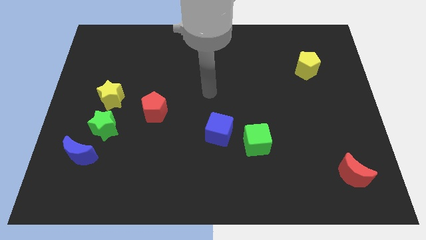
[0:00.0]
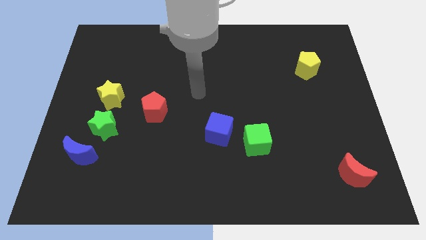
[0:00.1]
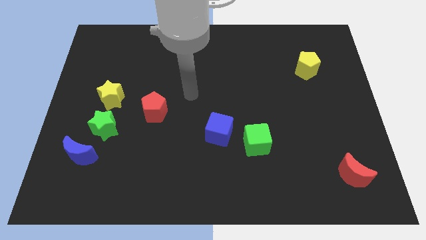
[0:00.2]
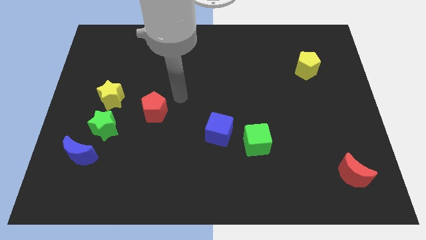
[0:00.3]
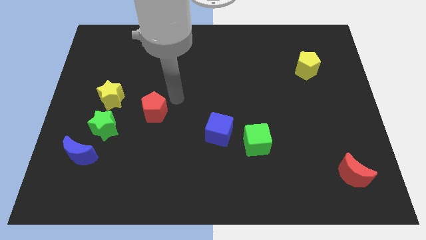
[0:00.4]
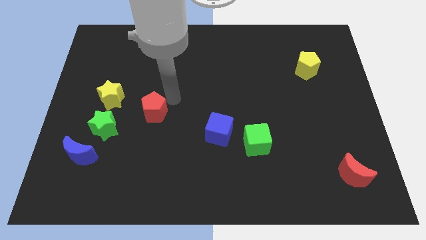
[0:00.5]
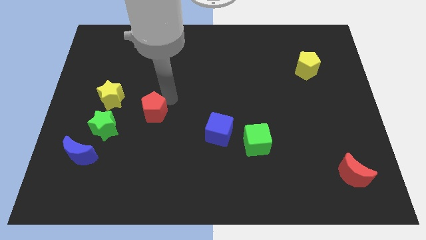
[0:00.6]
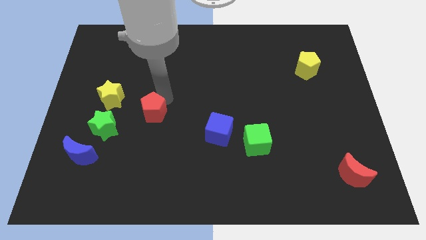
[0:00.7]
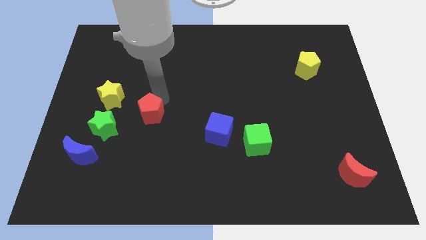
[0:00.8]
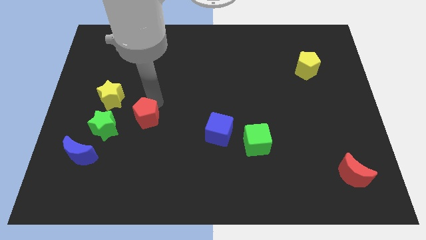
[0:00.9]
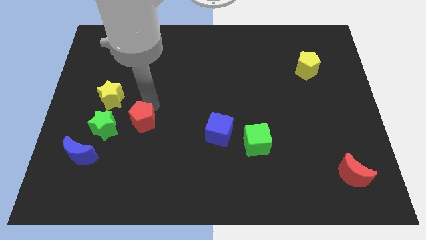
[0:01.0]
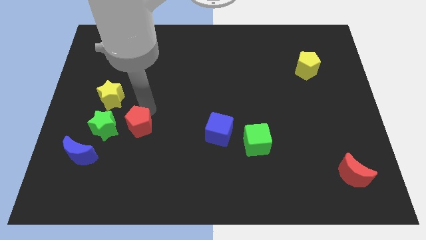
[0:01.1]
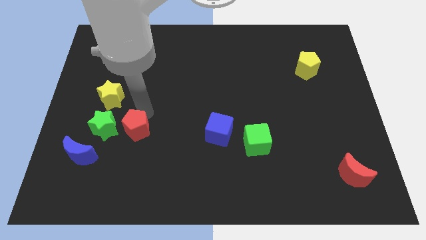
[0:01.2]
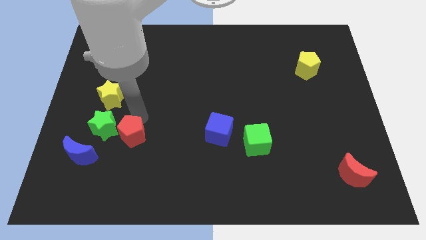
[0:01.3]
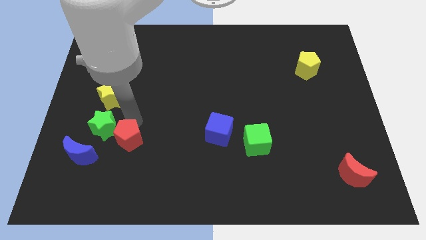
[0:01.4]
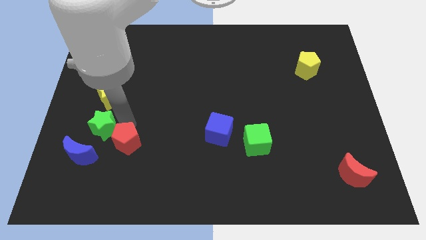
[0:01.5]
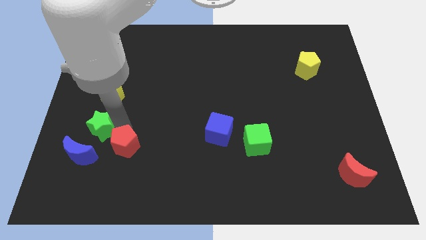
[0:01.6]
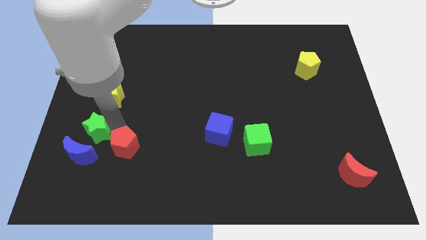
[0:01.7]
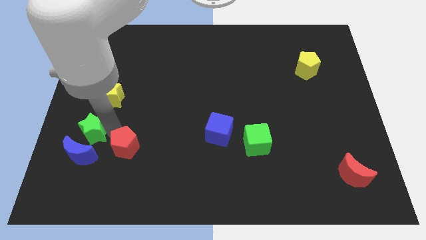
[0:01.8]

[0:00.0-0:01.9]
move the red pentagon right bottom of the green star

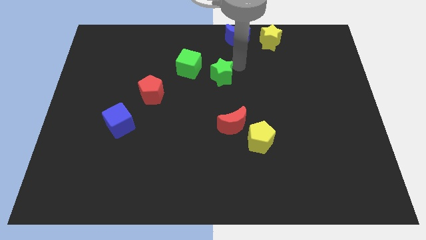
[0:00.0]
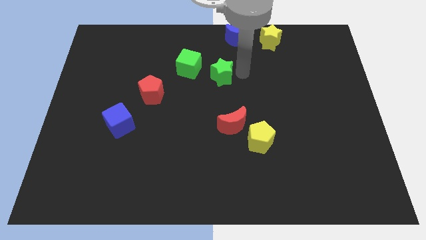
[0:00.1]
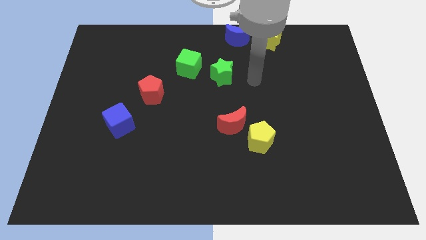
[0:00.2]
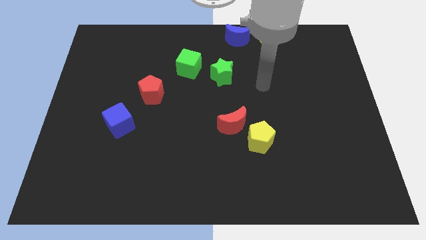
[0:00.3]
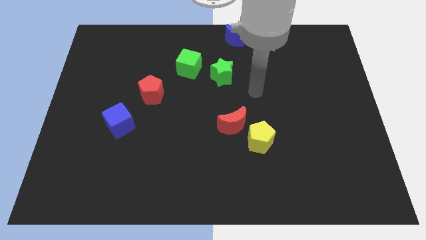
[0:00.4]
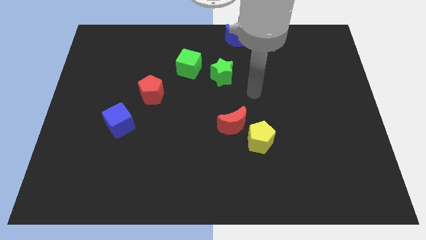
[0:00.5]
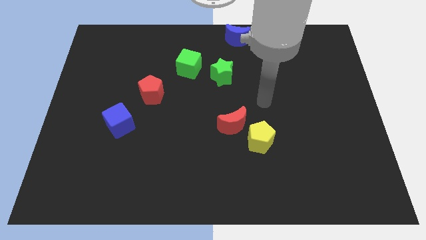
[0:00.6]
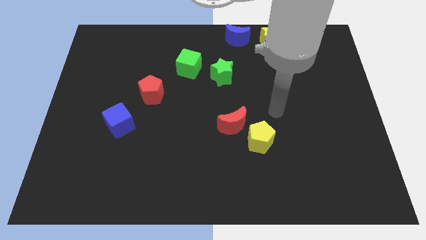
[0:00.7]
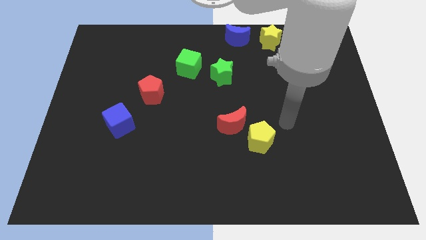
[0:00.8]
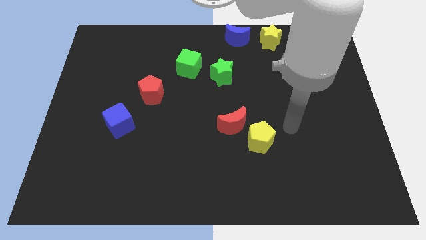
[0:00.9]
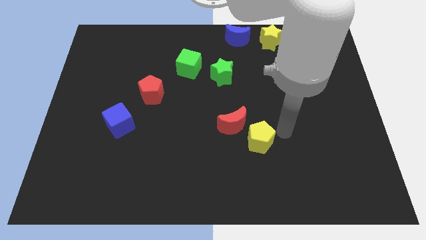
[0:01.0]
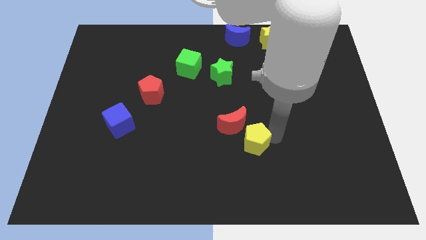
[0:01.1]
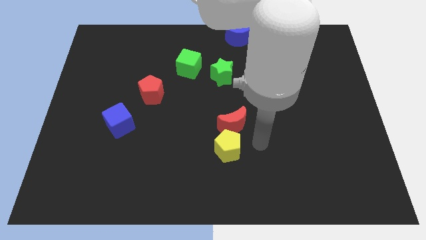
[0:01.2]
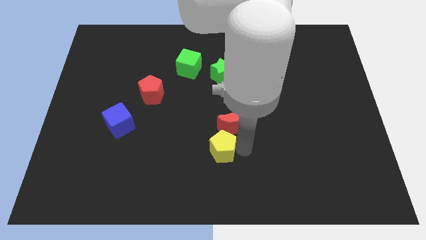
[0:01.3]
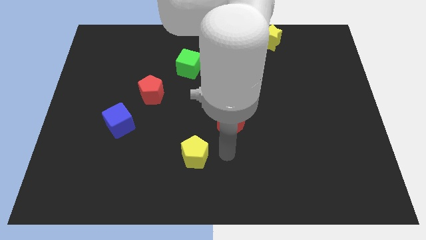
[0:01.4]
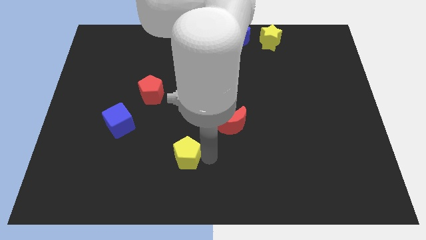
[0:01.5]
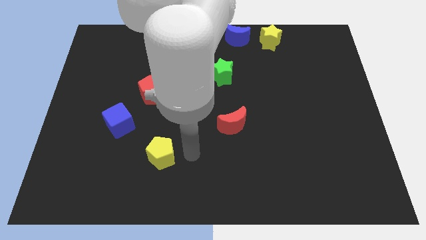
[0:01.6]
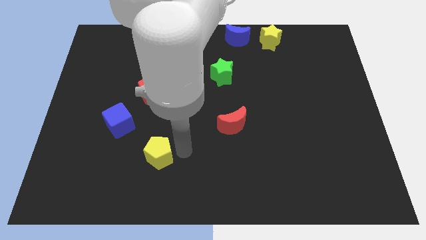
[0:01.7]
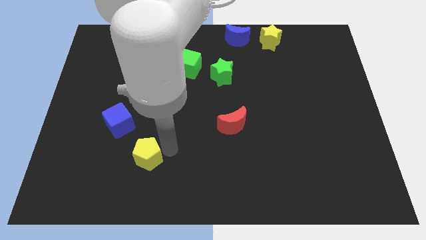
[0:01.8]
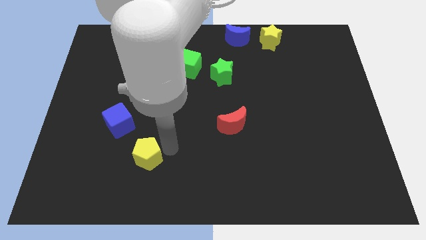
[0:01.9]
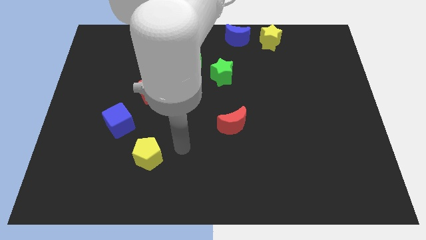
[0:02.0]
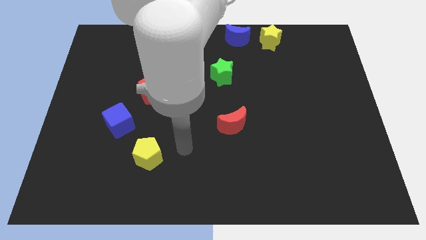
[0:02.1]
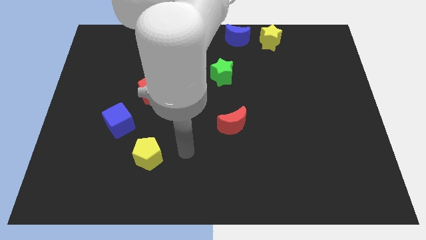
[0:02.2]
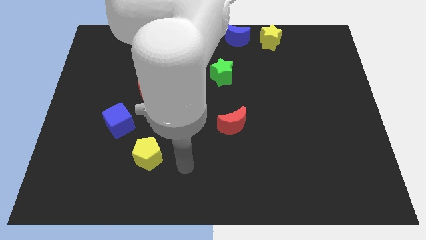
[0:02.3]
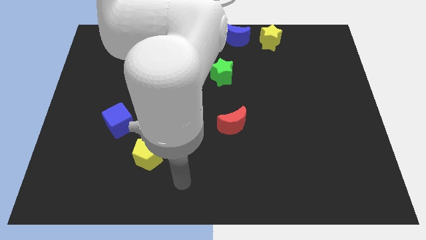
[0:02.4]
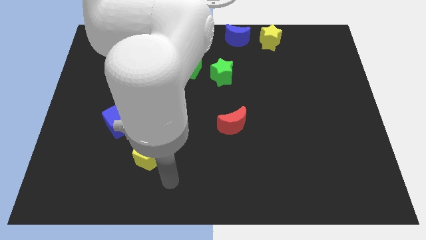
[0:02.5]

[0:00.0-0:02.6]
move the yellow pentagon towards the left side of the board

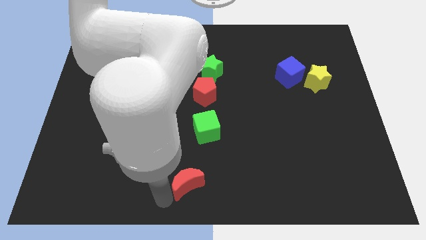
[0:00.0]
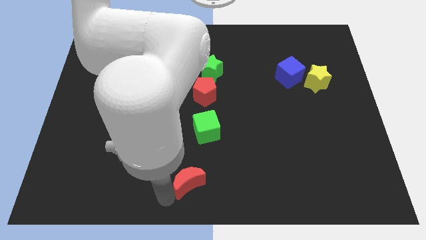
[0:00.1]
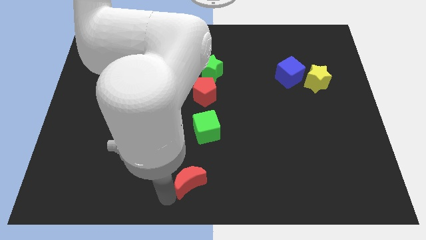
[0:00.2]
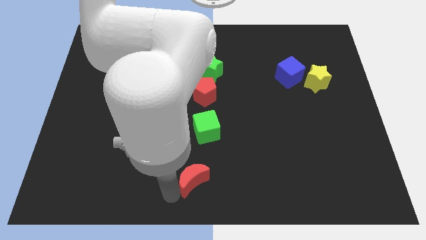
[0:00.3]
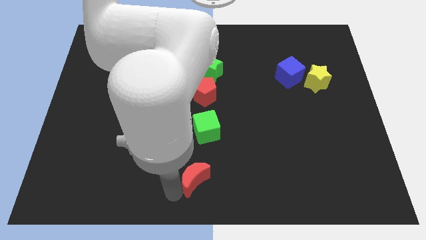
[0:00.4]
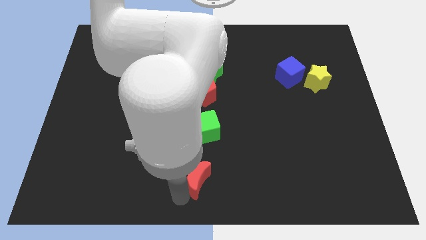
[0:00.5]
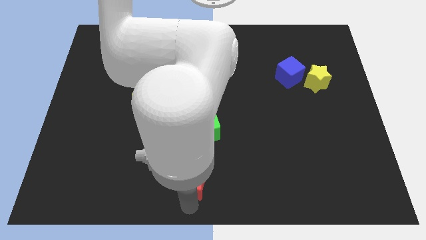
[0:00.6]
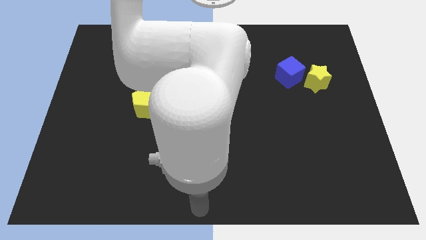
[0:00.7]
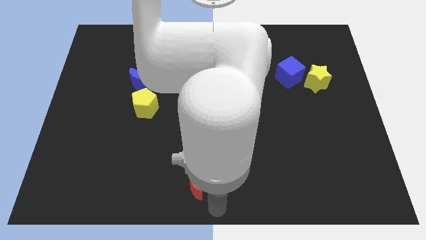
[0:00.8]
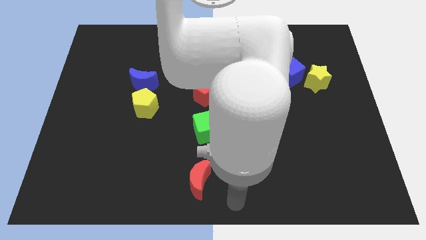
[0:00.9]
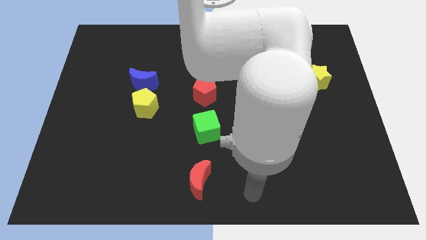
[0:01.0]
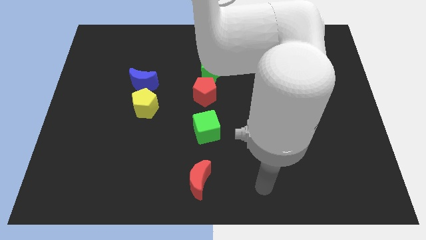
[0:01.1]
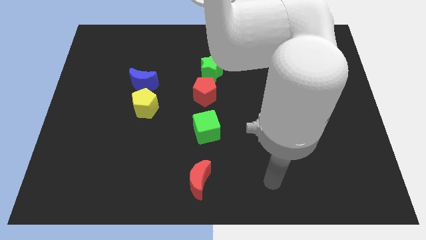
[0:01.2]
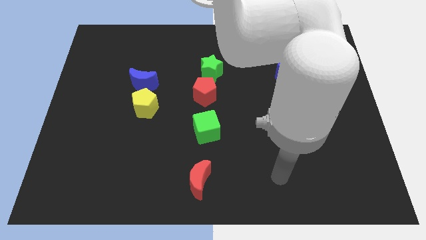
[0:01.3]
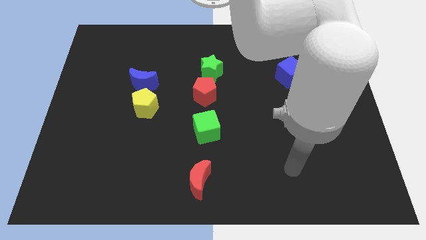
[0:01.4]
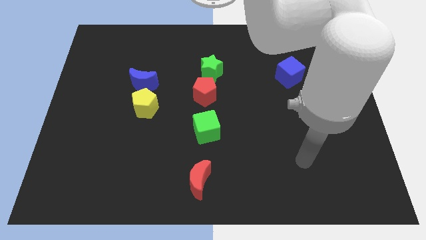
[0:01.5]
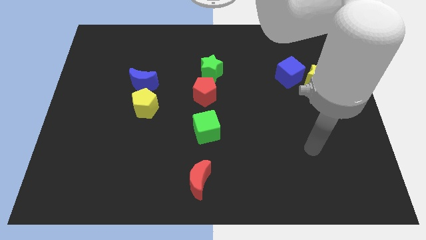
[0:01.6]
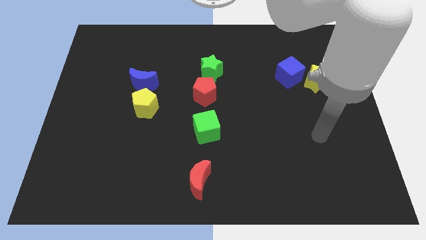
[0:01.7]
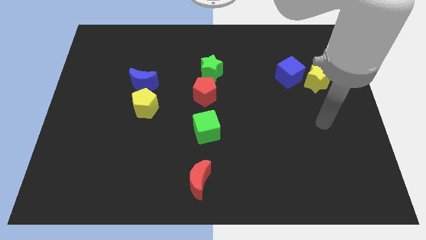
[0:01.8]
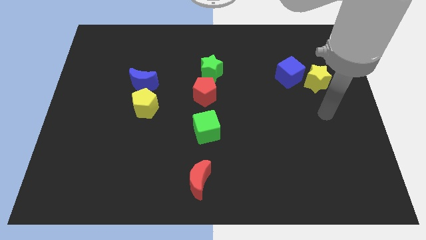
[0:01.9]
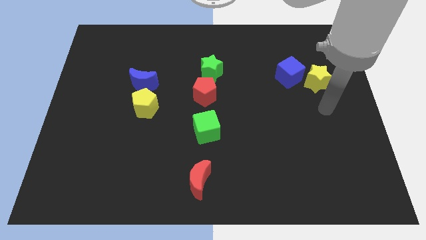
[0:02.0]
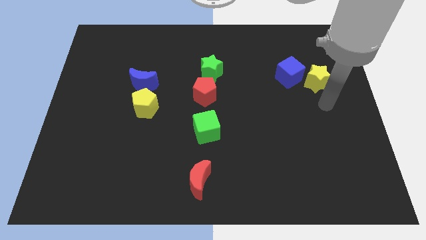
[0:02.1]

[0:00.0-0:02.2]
move the arm towards the yellow star

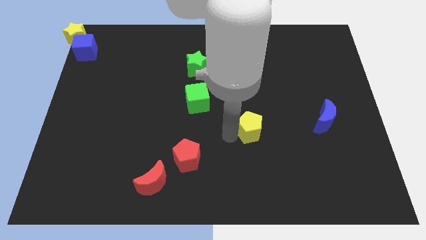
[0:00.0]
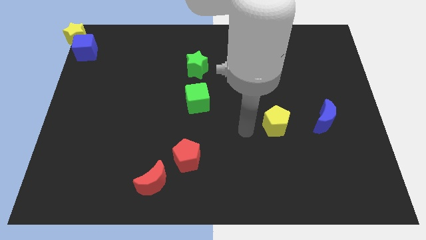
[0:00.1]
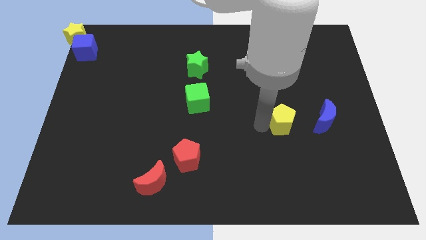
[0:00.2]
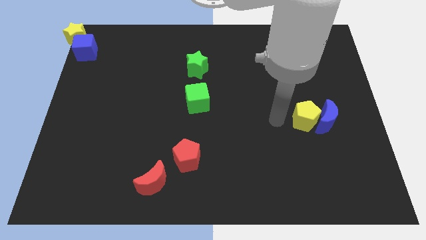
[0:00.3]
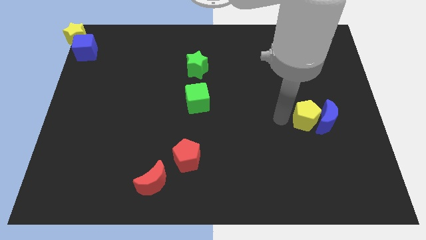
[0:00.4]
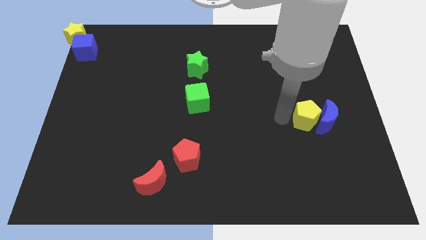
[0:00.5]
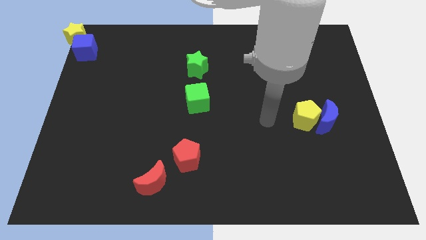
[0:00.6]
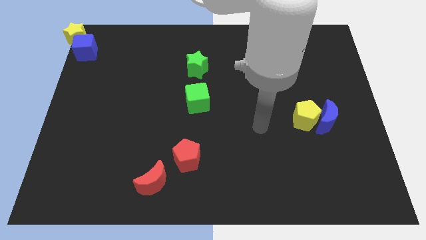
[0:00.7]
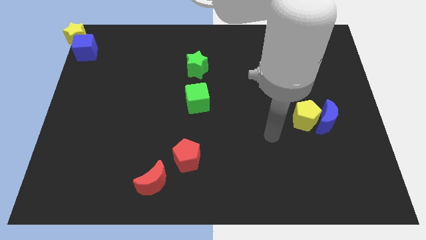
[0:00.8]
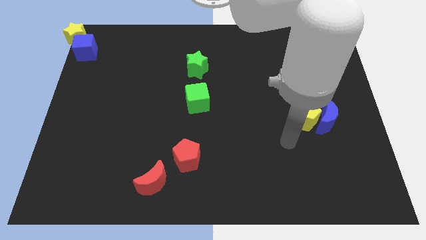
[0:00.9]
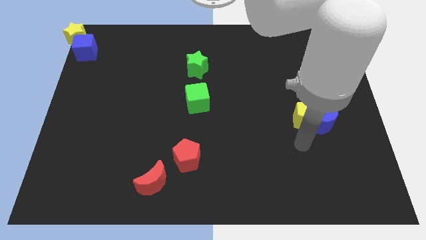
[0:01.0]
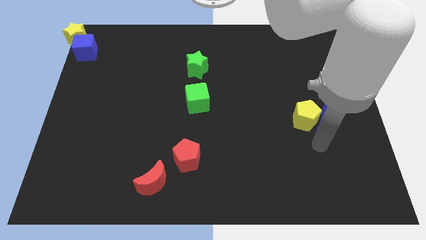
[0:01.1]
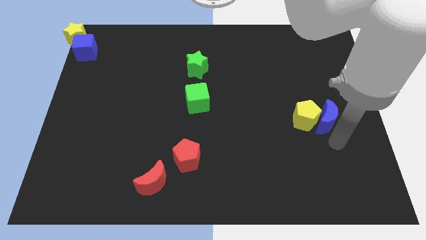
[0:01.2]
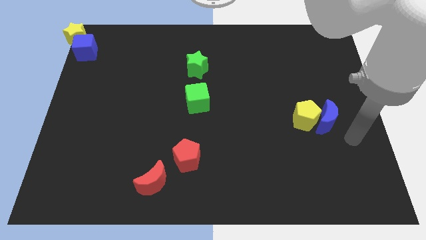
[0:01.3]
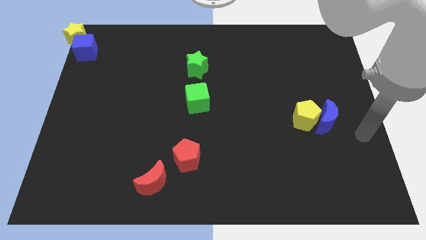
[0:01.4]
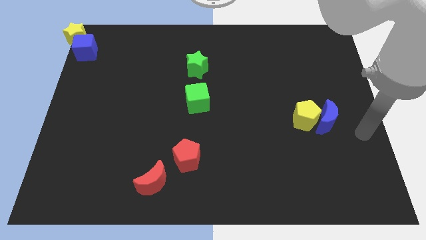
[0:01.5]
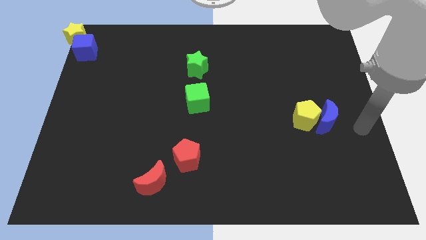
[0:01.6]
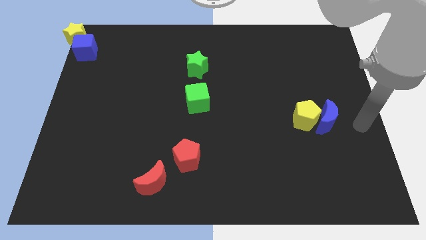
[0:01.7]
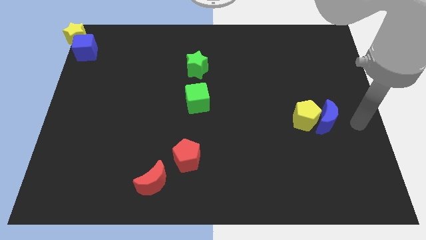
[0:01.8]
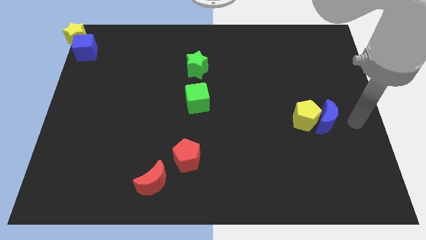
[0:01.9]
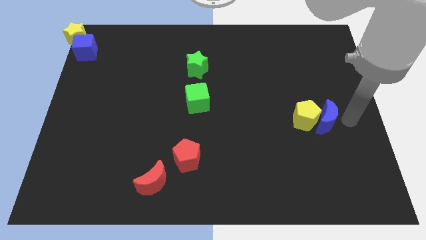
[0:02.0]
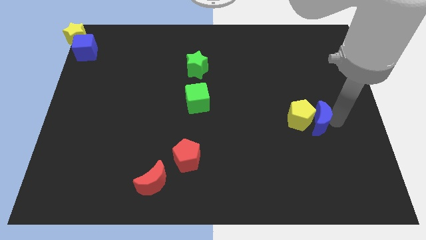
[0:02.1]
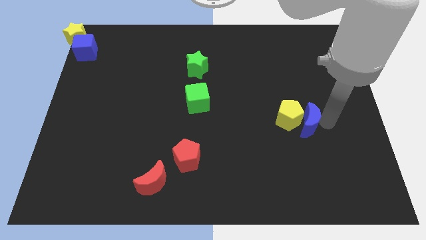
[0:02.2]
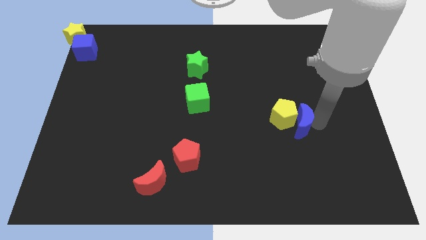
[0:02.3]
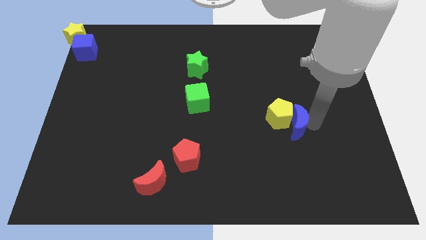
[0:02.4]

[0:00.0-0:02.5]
place yellow pentagon towards blue crescent
